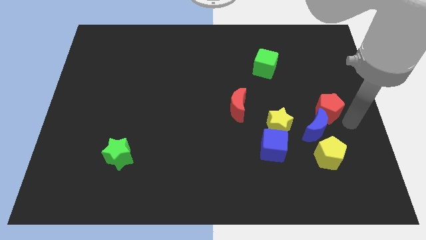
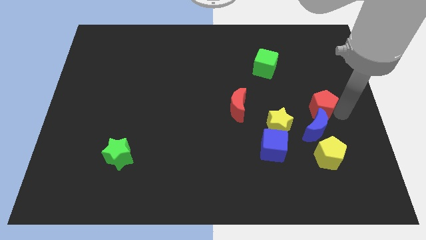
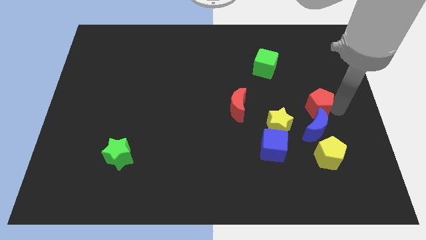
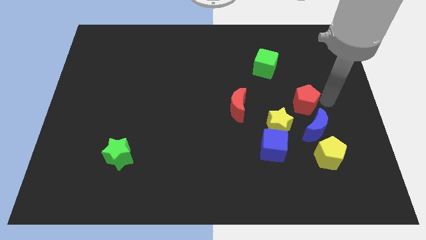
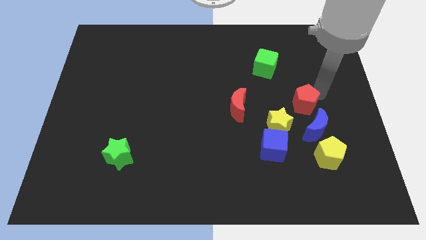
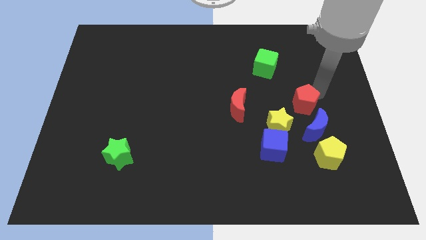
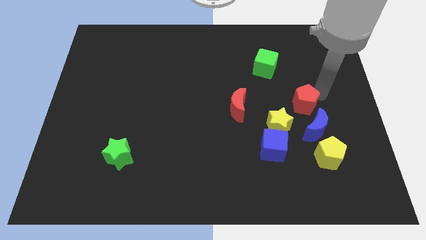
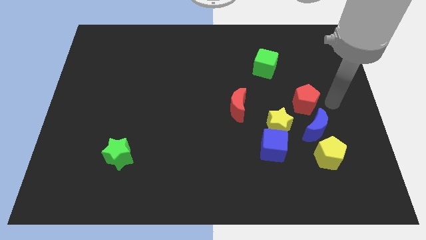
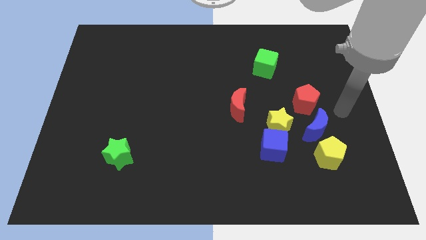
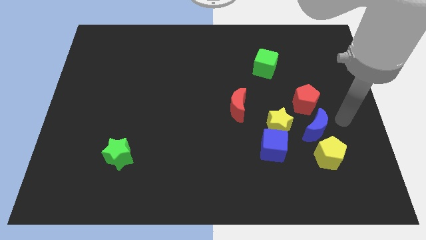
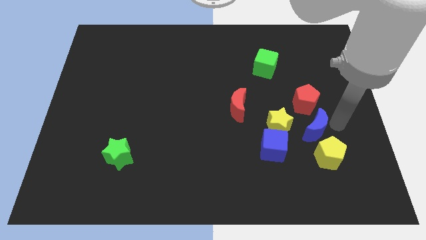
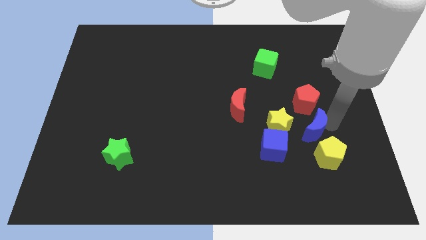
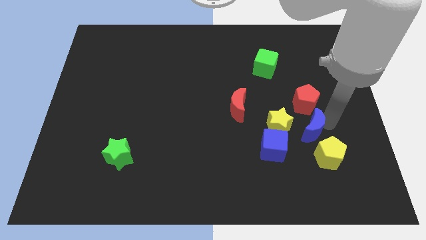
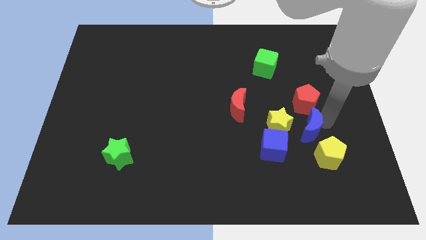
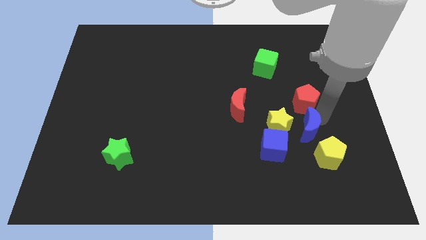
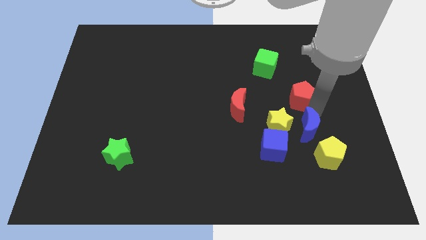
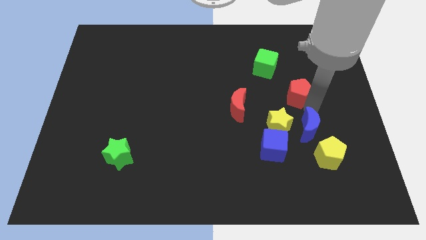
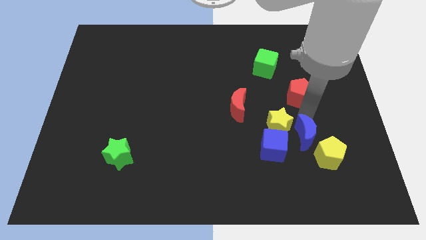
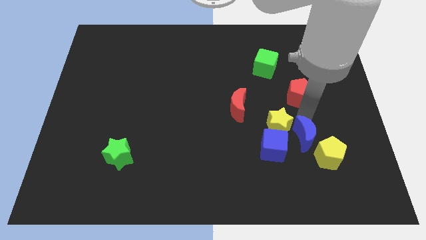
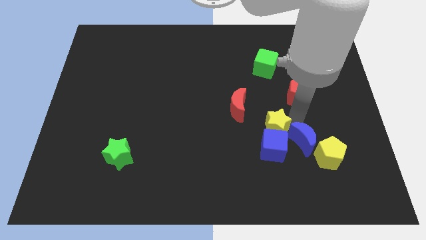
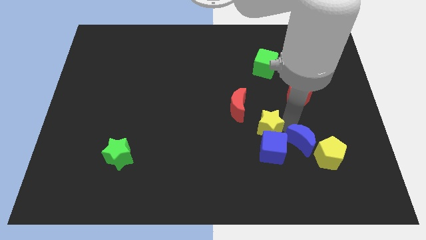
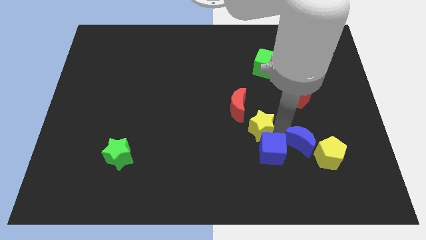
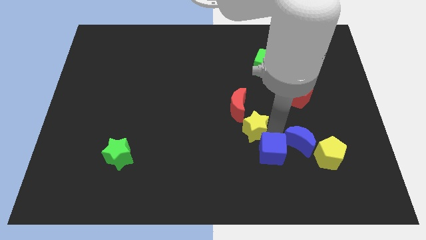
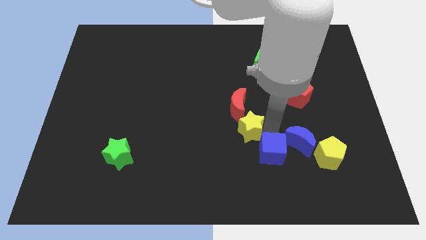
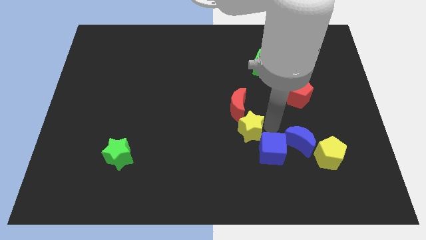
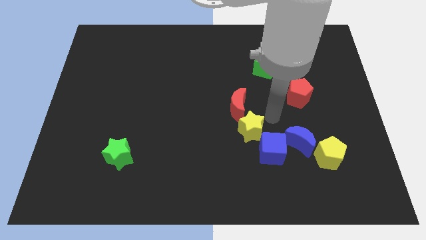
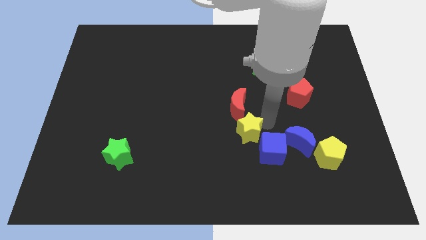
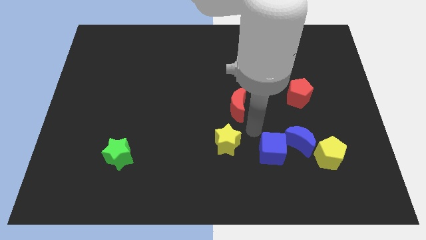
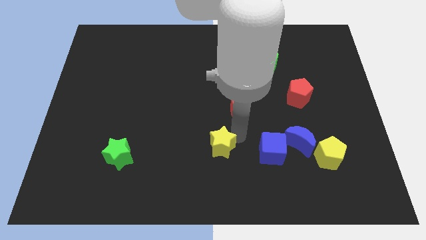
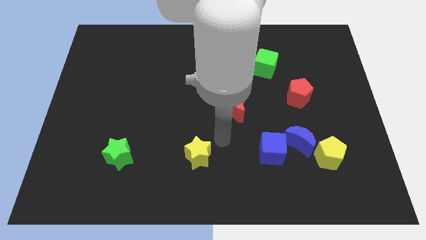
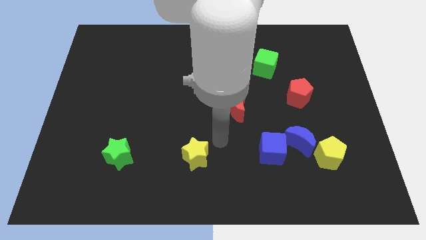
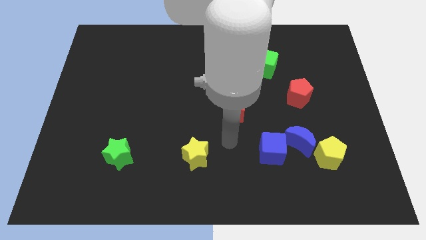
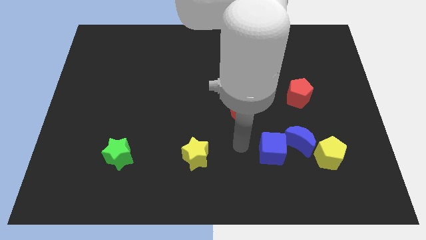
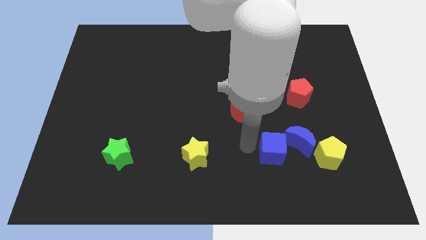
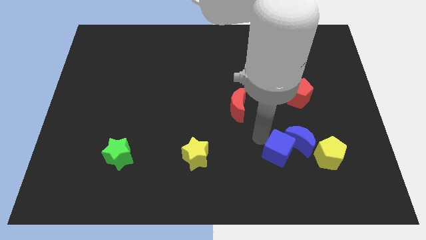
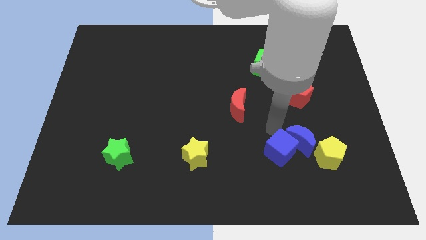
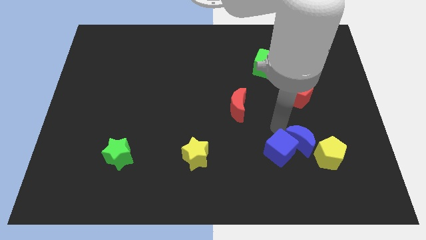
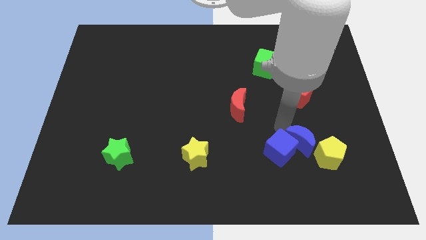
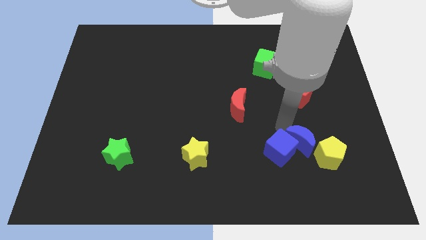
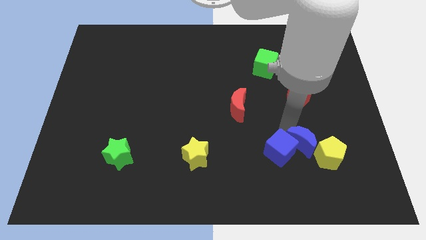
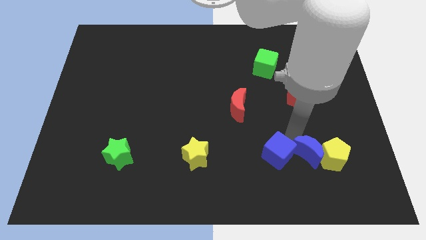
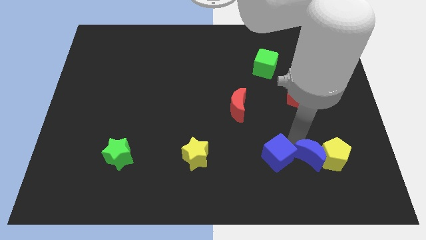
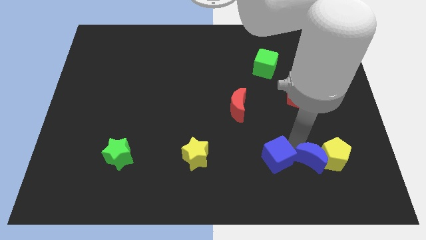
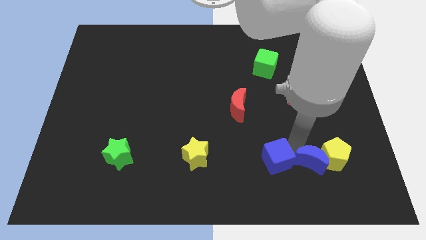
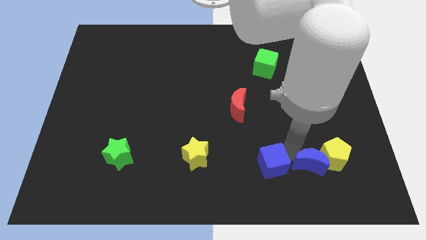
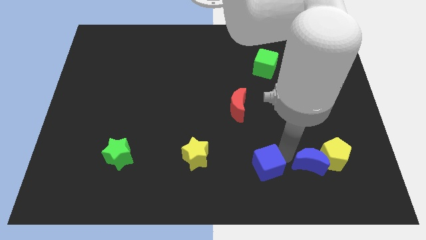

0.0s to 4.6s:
move the yellow star to the bottom center of the board

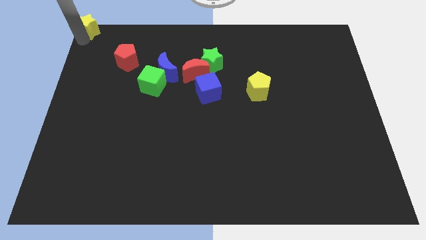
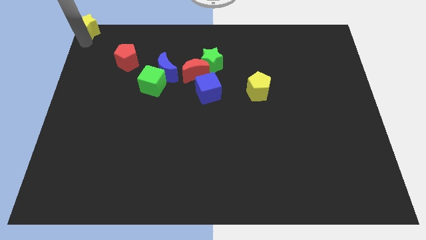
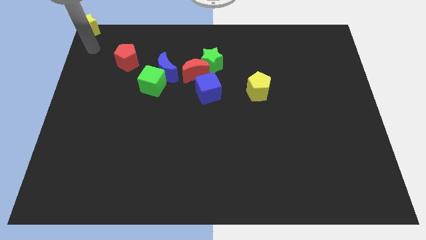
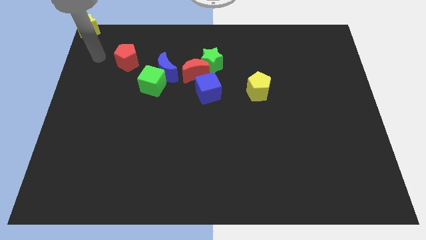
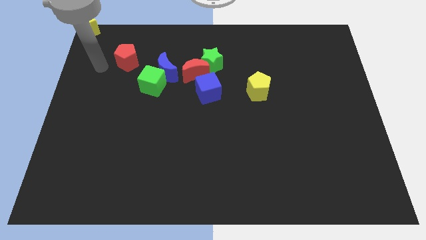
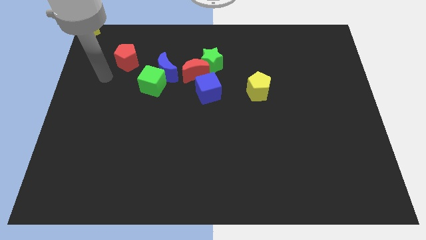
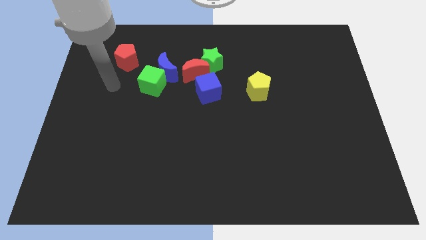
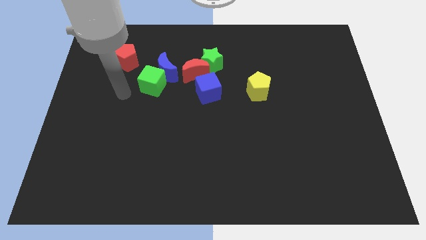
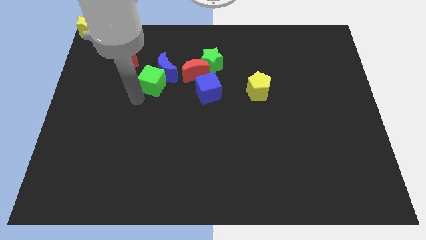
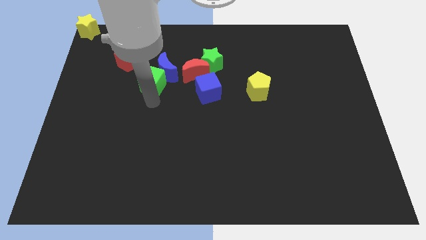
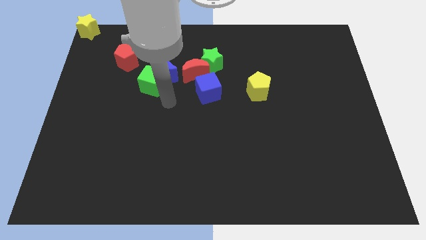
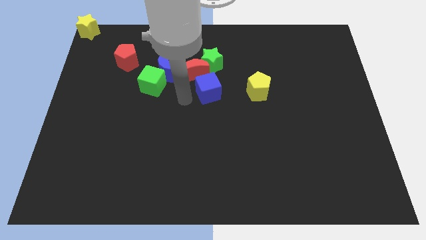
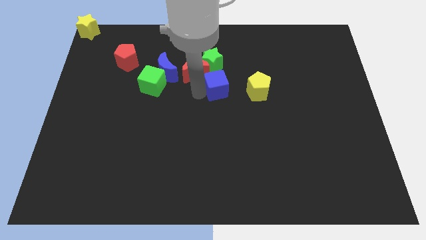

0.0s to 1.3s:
place the arm to the left of the blue cube

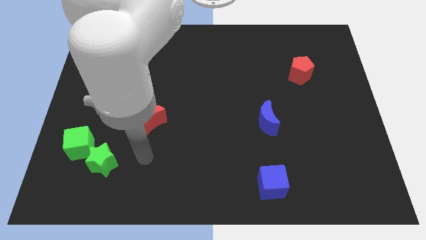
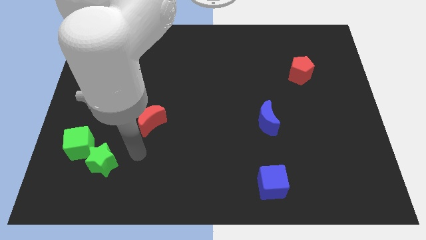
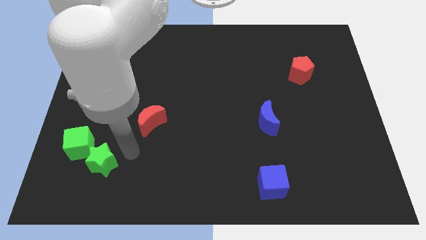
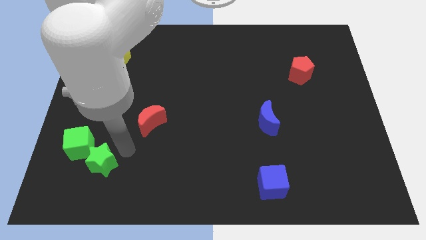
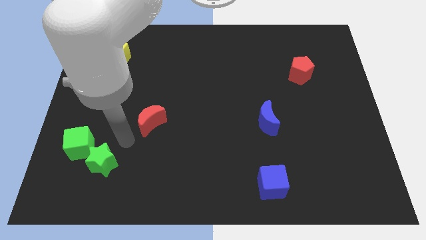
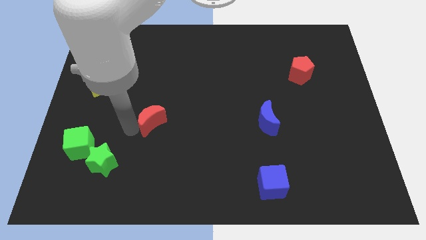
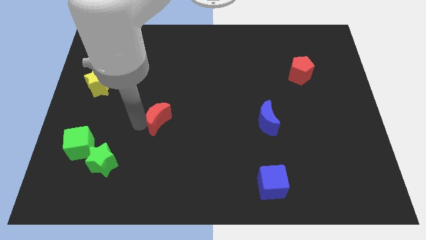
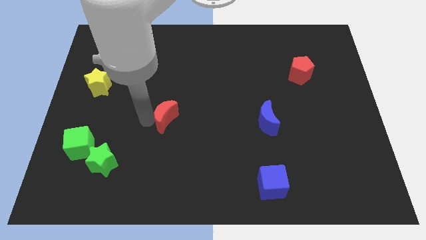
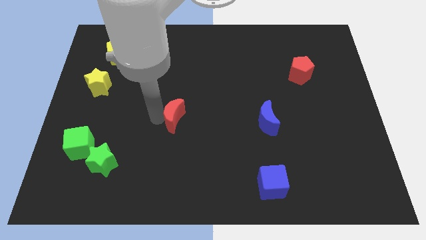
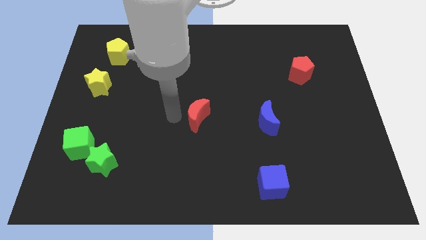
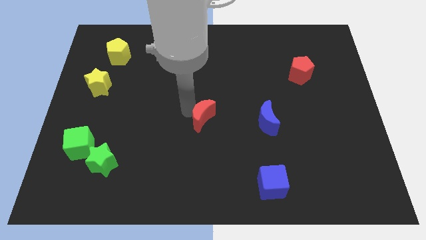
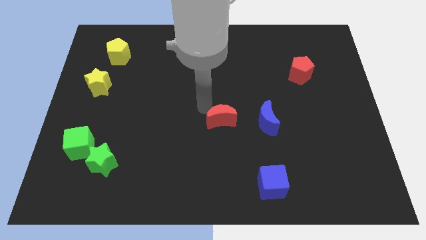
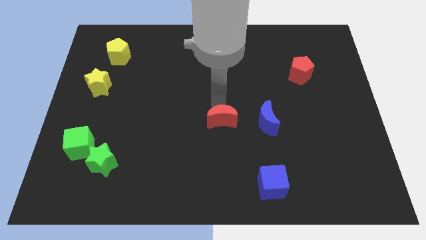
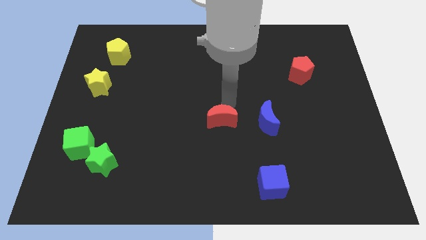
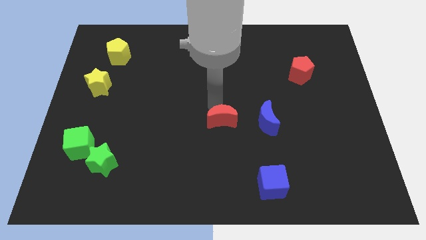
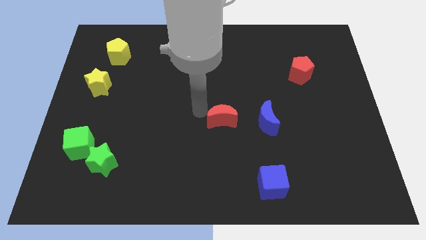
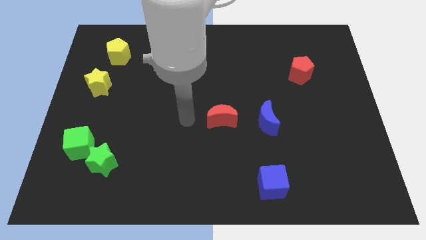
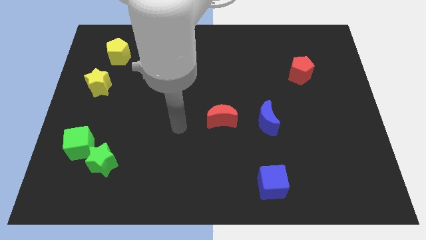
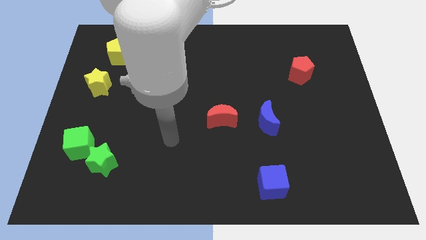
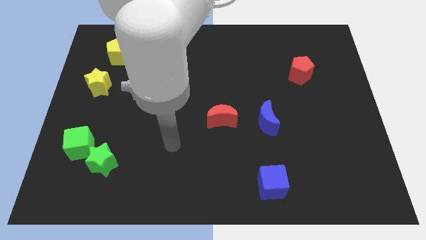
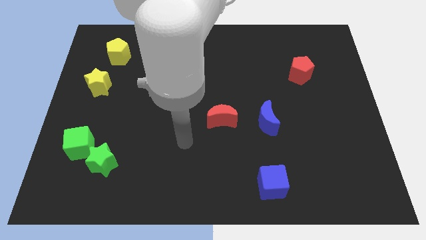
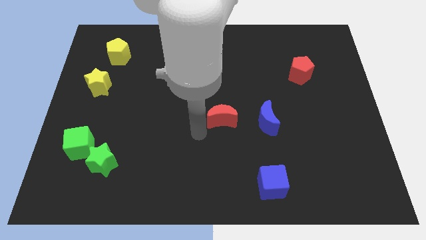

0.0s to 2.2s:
move the red moon to the left of the blue crescent

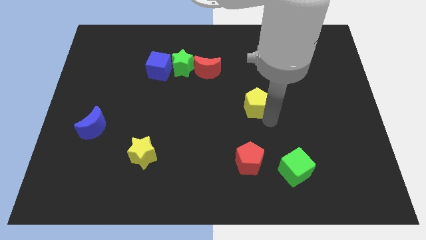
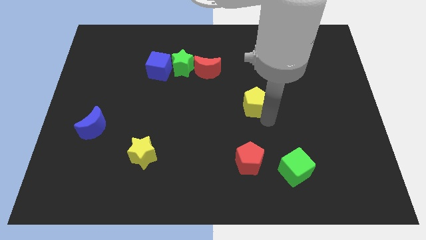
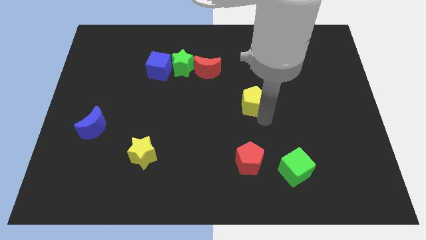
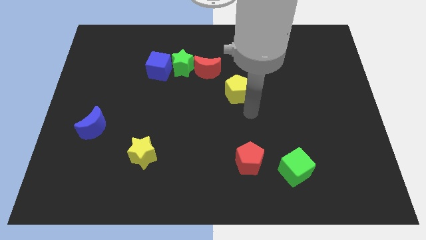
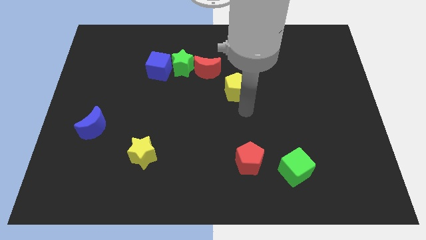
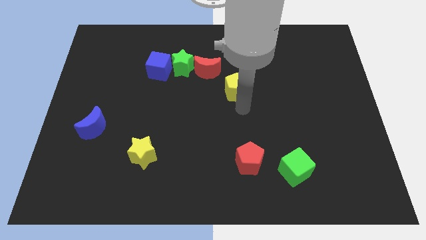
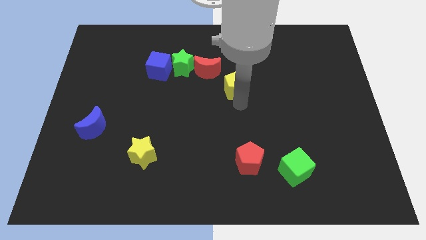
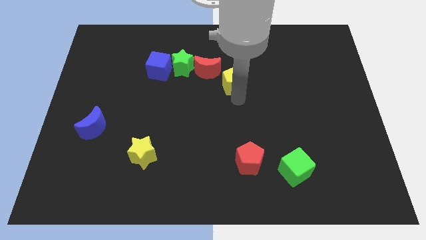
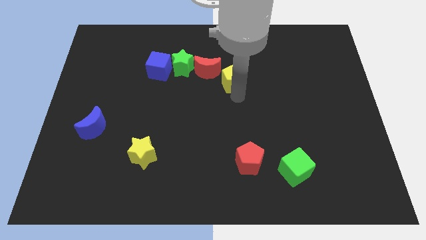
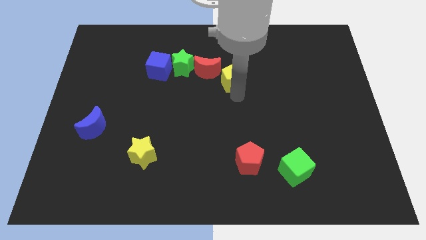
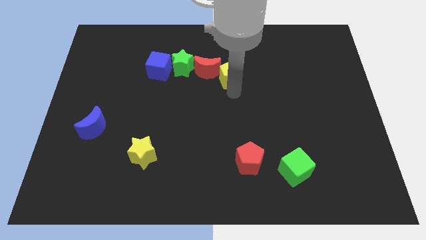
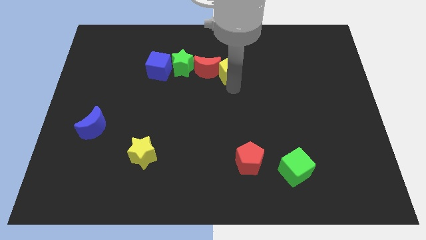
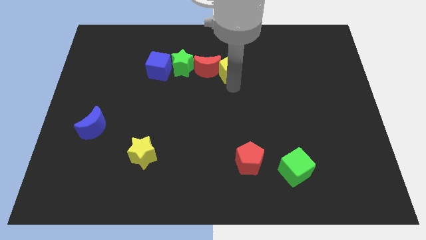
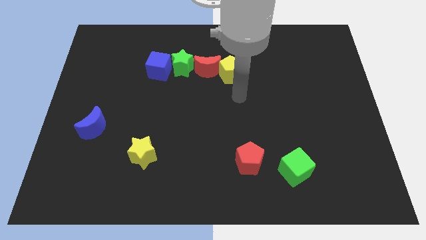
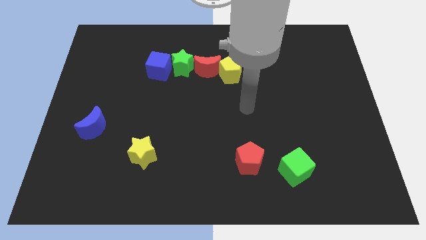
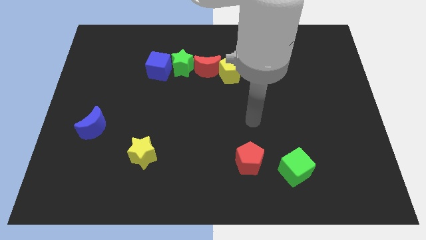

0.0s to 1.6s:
push the yellow pentagon closer to the bottom of the red moon
